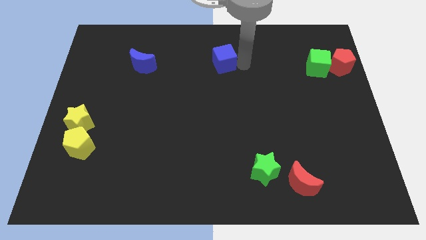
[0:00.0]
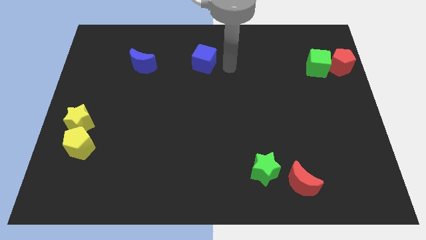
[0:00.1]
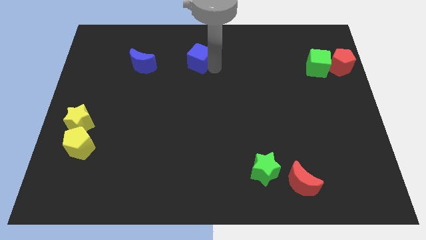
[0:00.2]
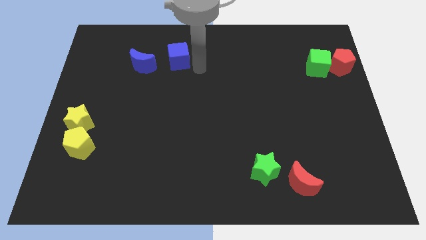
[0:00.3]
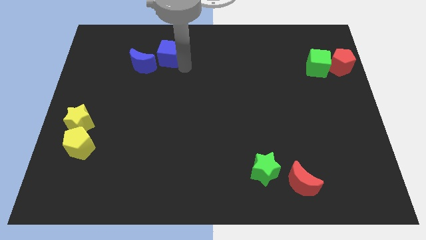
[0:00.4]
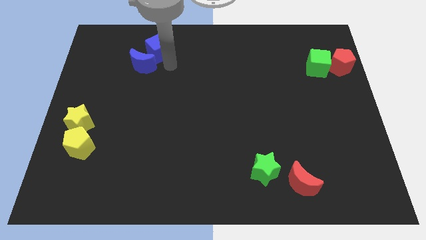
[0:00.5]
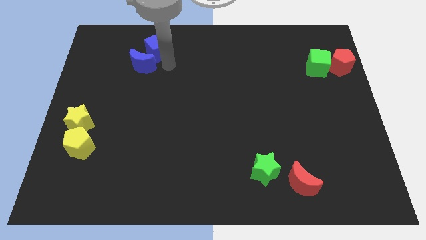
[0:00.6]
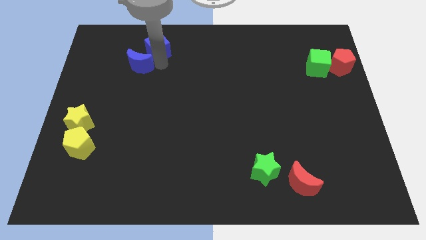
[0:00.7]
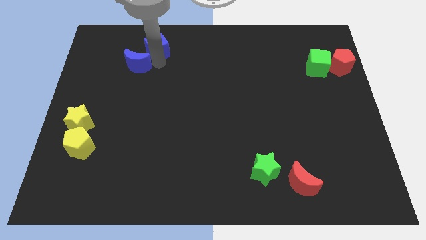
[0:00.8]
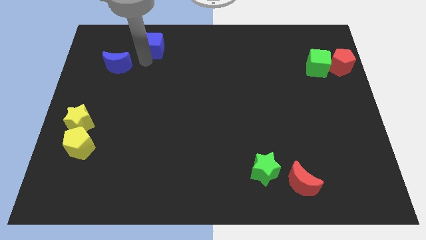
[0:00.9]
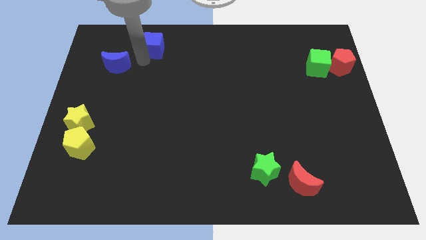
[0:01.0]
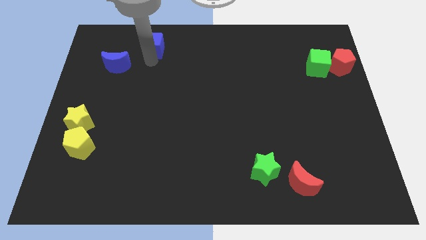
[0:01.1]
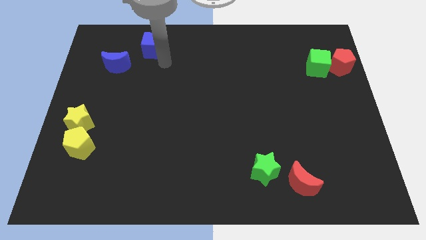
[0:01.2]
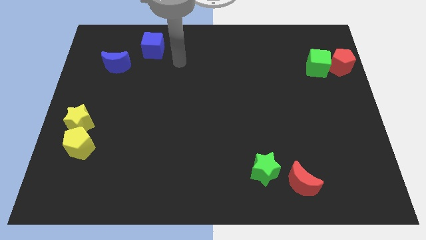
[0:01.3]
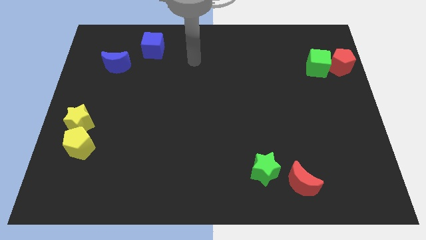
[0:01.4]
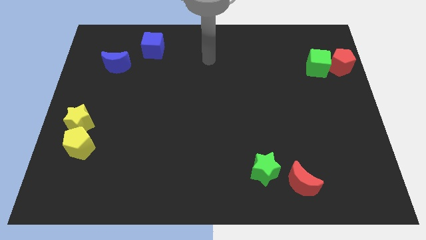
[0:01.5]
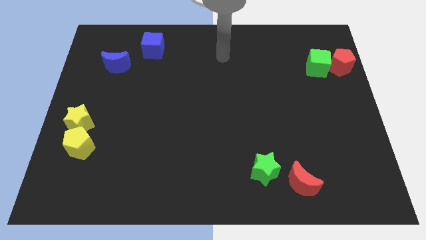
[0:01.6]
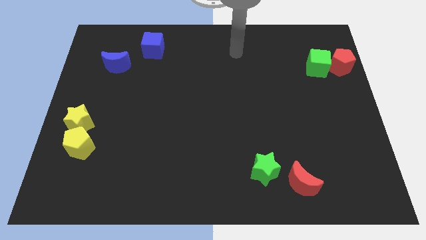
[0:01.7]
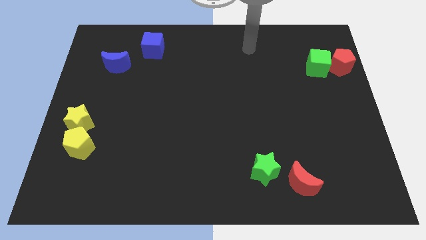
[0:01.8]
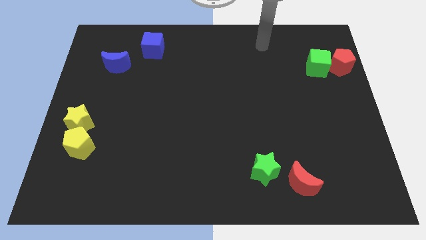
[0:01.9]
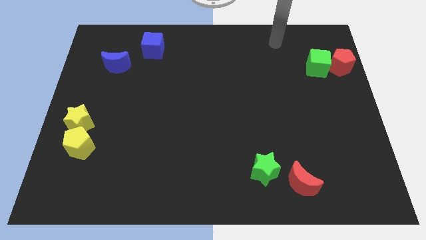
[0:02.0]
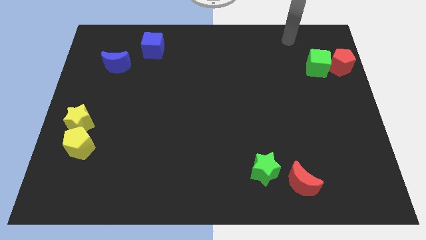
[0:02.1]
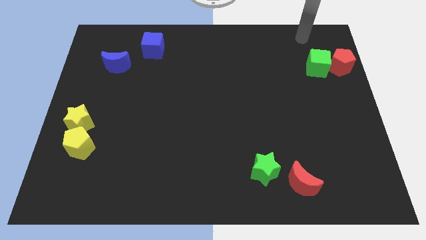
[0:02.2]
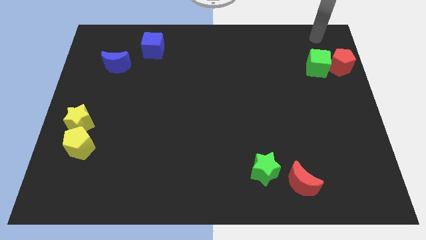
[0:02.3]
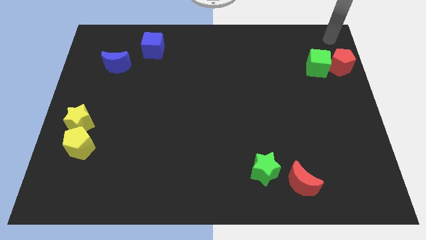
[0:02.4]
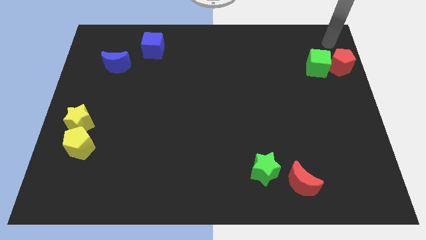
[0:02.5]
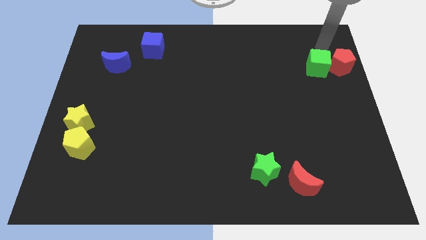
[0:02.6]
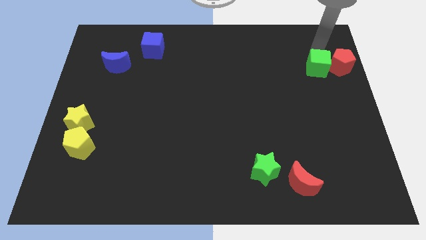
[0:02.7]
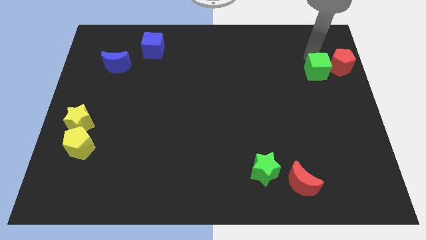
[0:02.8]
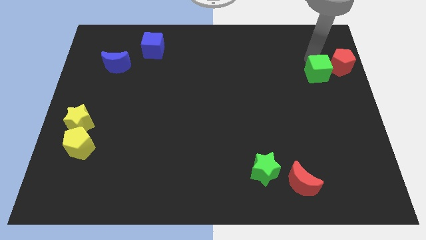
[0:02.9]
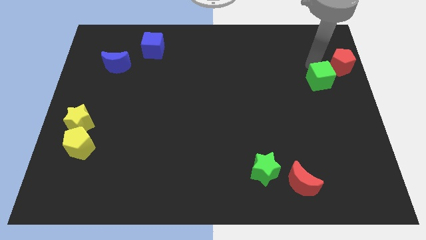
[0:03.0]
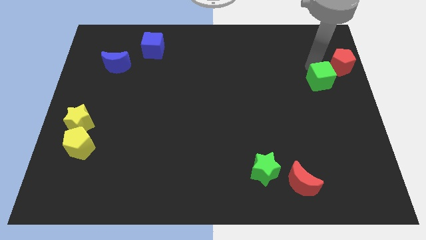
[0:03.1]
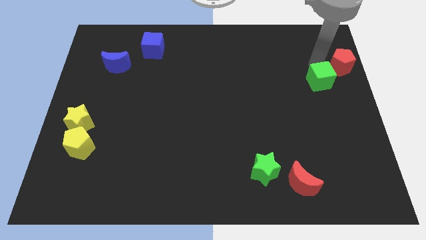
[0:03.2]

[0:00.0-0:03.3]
push the blue cube and separate the blue moon towards the left side

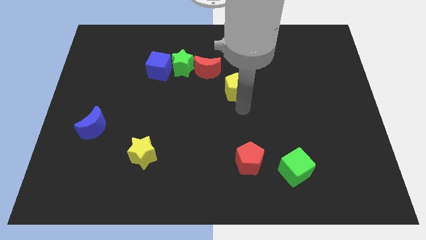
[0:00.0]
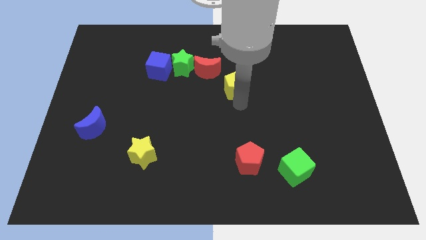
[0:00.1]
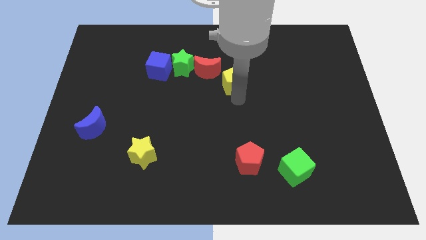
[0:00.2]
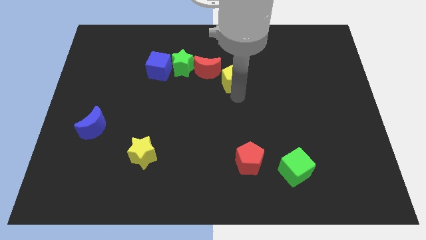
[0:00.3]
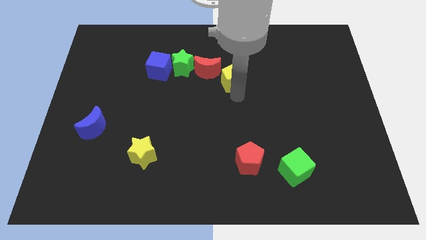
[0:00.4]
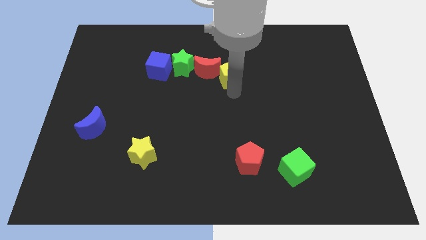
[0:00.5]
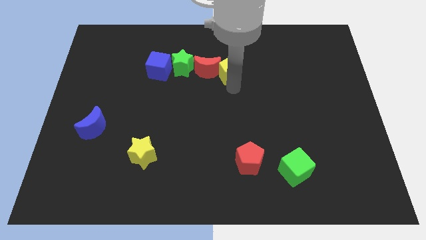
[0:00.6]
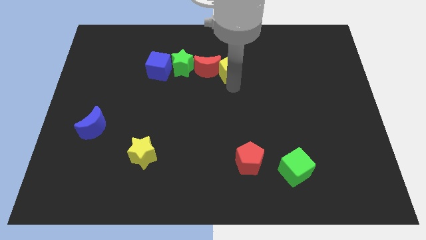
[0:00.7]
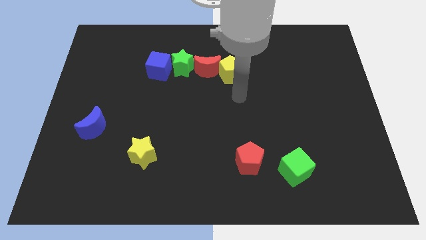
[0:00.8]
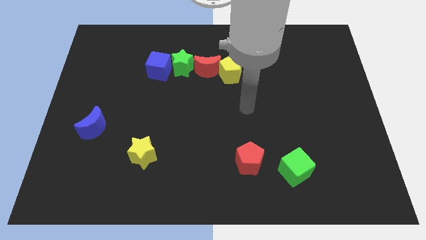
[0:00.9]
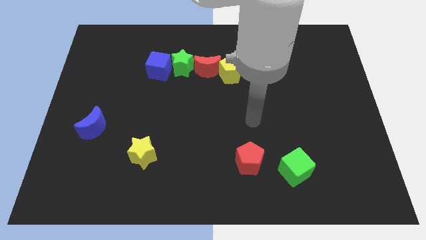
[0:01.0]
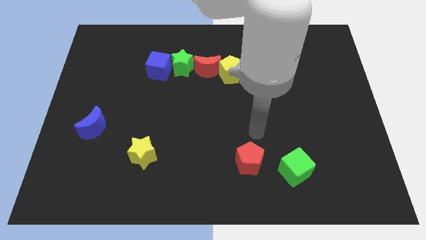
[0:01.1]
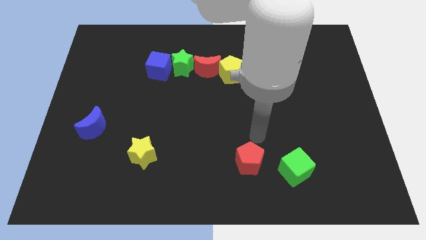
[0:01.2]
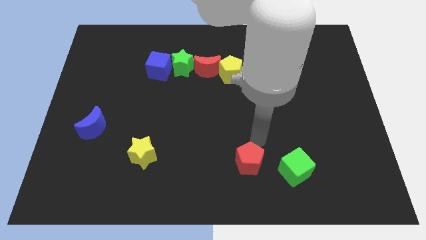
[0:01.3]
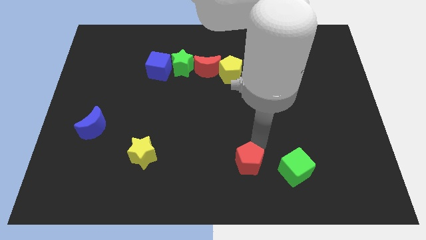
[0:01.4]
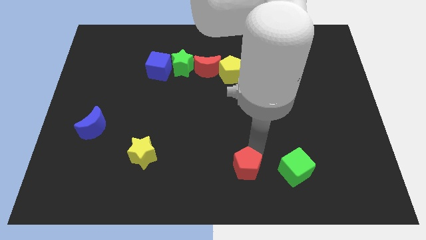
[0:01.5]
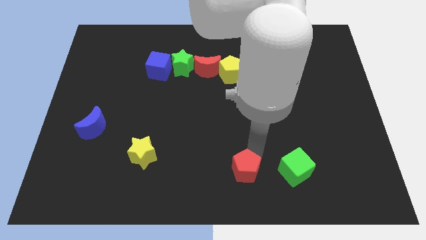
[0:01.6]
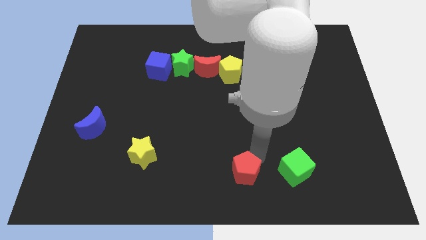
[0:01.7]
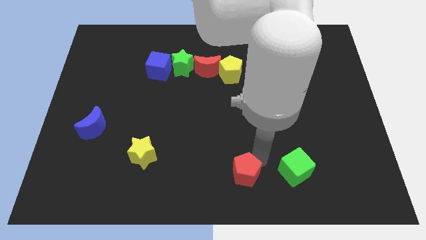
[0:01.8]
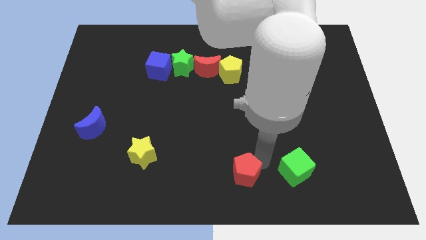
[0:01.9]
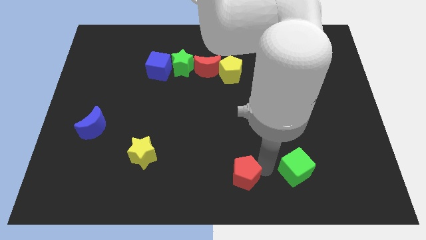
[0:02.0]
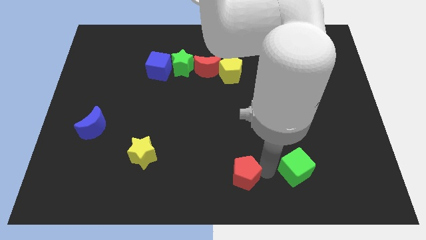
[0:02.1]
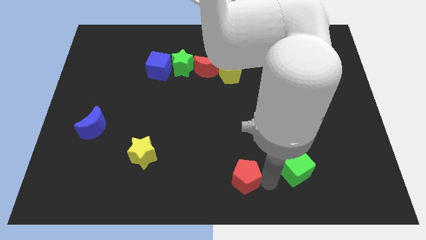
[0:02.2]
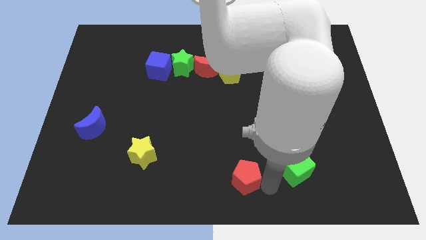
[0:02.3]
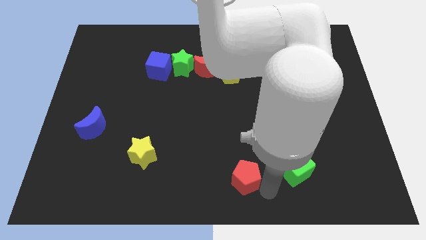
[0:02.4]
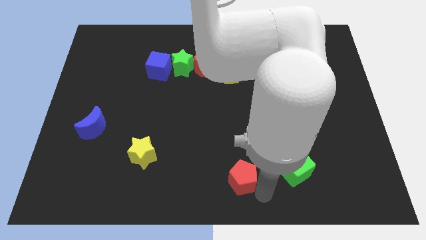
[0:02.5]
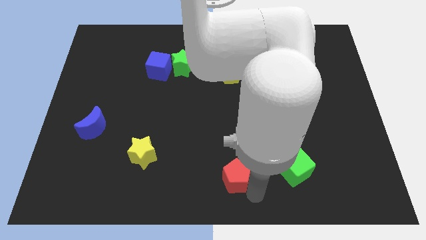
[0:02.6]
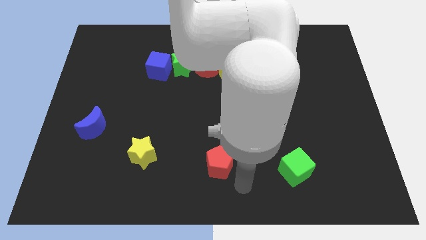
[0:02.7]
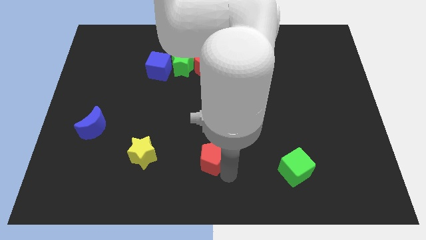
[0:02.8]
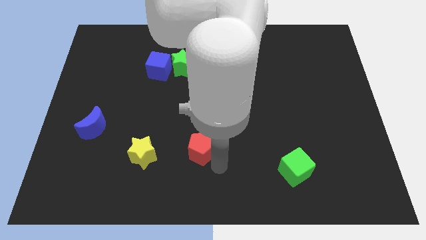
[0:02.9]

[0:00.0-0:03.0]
place the red pentagon parallel to the yellow star

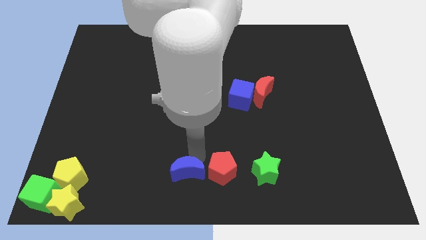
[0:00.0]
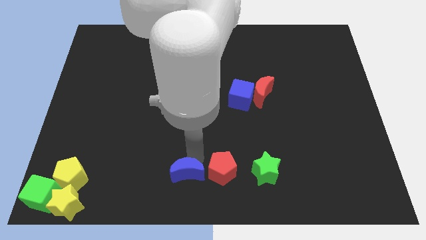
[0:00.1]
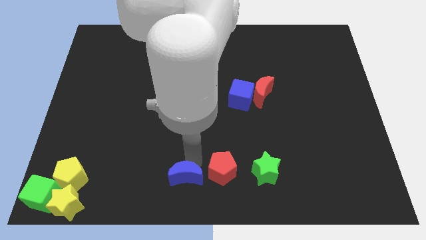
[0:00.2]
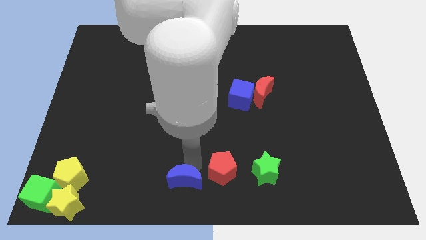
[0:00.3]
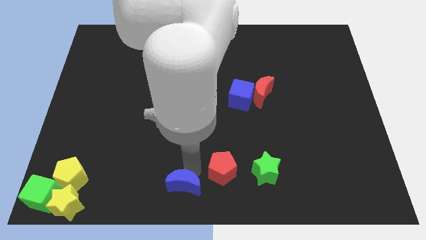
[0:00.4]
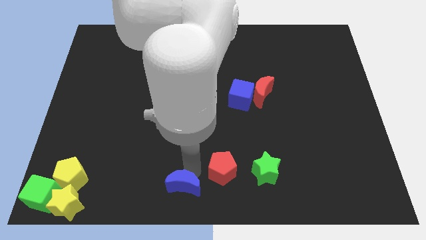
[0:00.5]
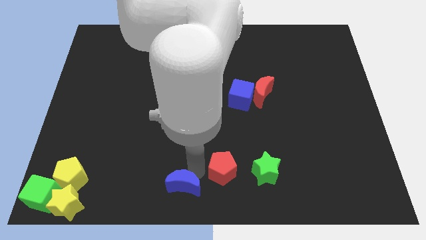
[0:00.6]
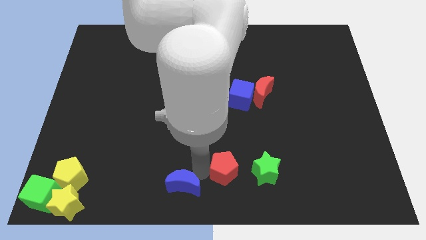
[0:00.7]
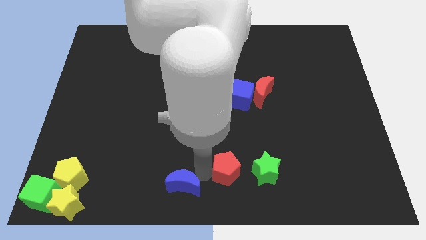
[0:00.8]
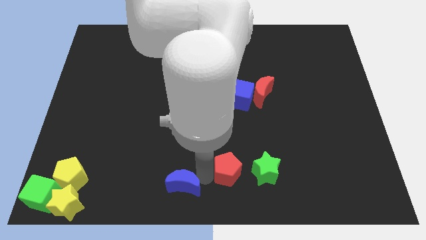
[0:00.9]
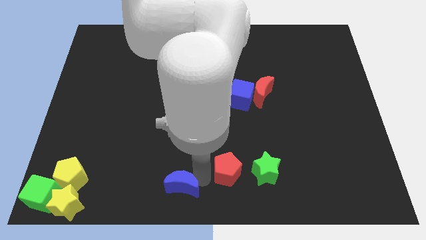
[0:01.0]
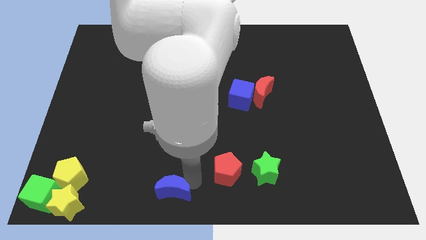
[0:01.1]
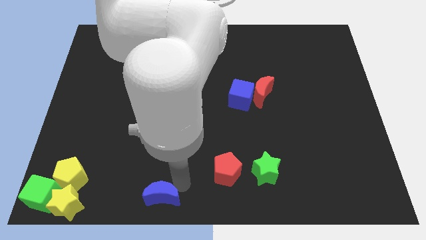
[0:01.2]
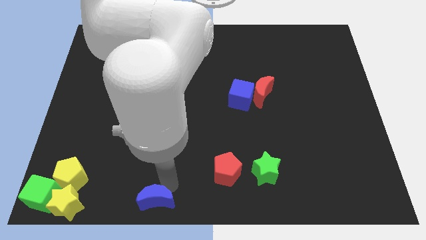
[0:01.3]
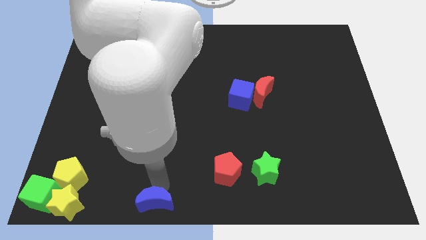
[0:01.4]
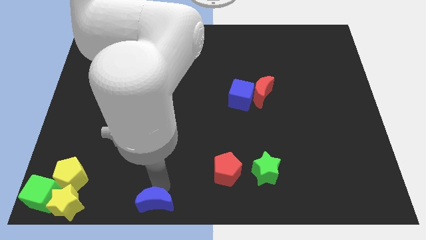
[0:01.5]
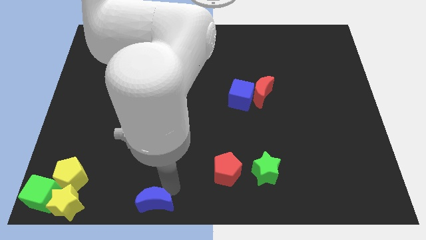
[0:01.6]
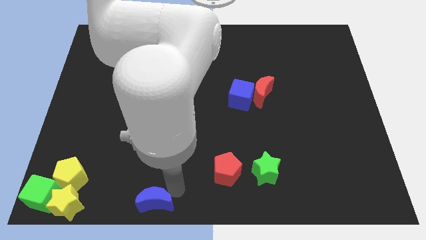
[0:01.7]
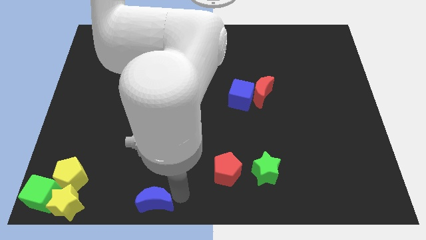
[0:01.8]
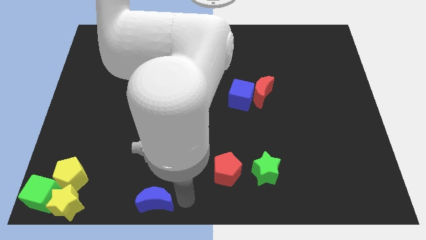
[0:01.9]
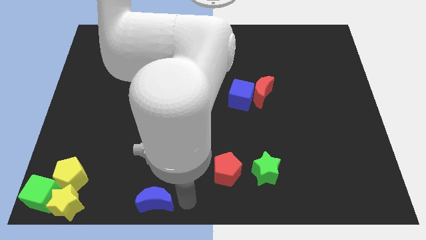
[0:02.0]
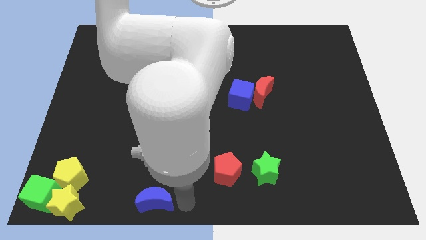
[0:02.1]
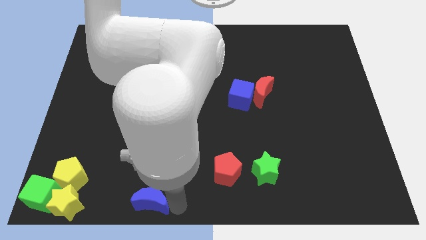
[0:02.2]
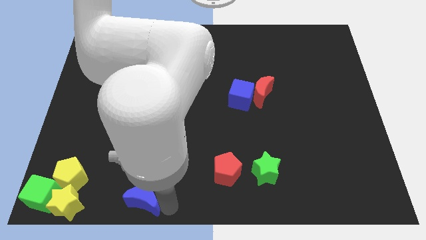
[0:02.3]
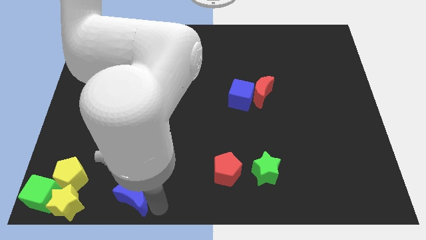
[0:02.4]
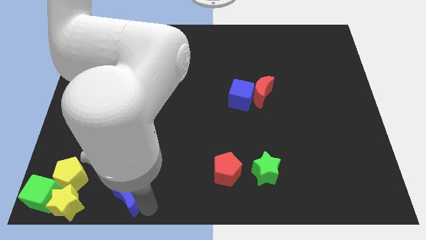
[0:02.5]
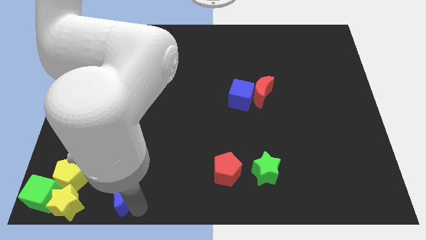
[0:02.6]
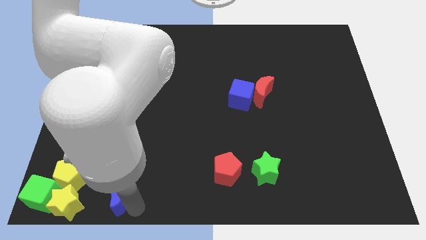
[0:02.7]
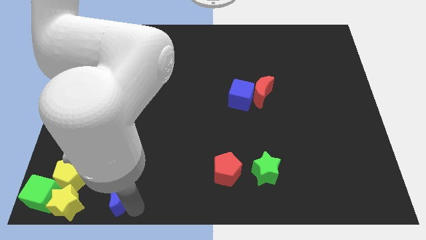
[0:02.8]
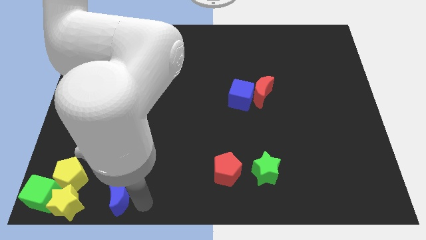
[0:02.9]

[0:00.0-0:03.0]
push the blue moon right to the yellow blocks
